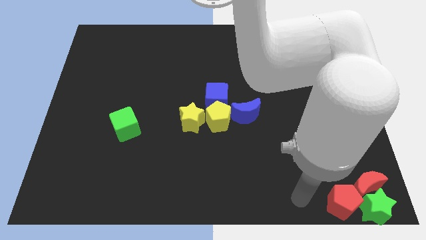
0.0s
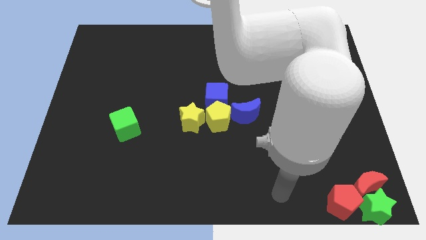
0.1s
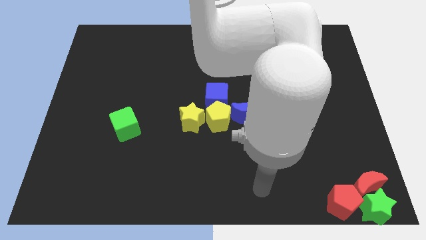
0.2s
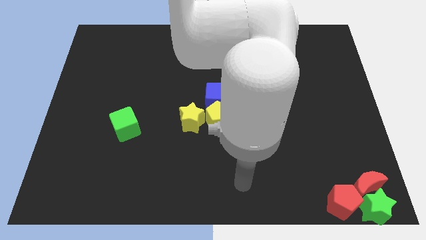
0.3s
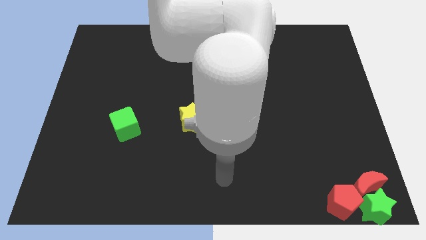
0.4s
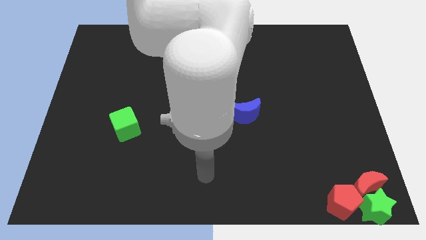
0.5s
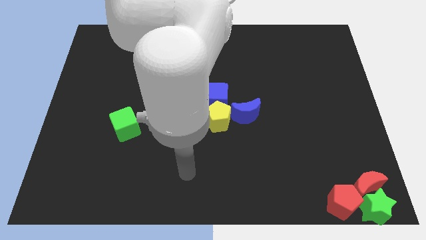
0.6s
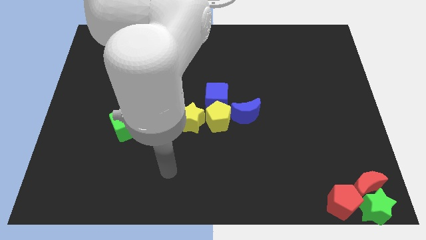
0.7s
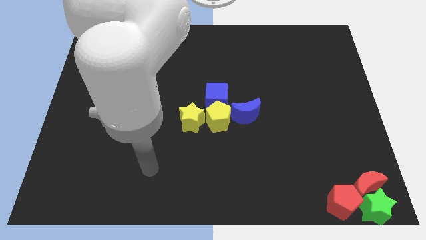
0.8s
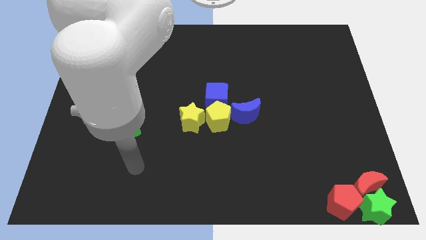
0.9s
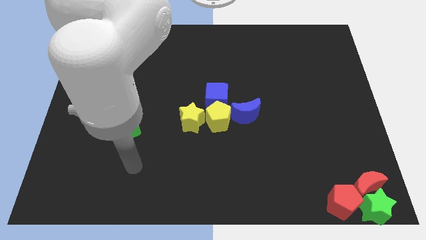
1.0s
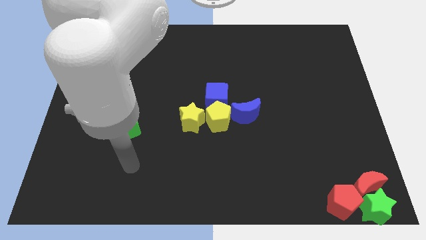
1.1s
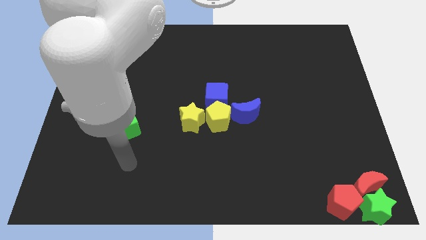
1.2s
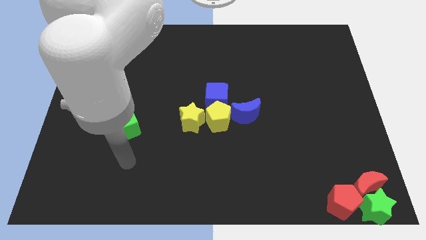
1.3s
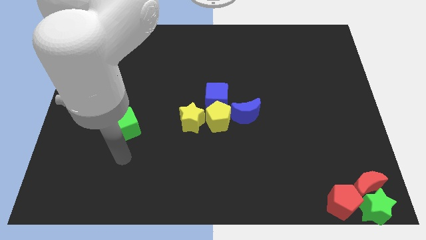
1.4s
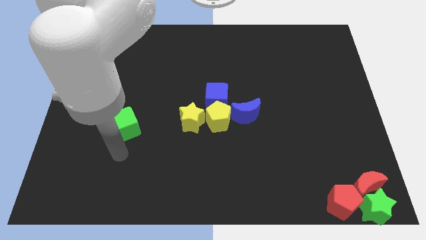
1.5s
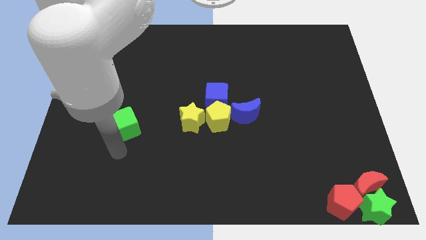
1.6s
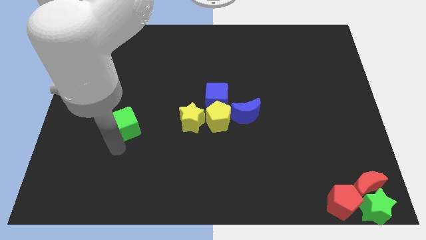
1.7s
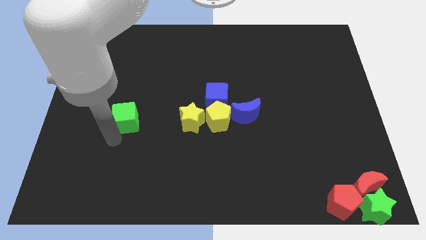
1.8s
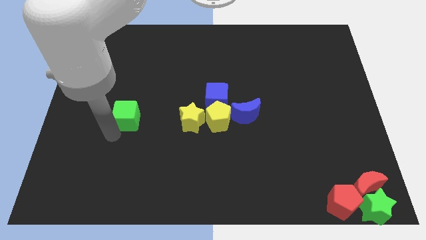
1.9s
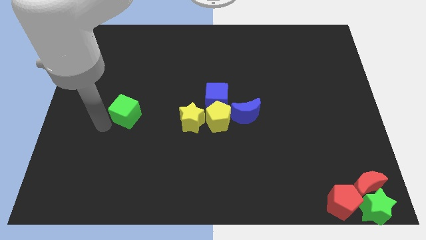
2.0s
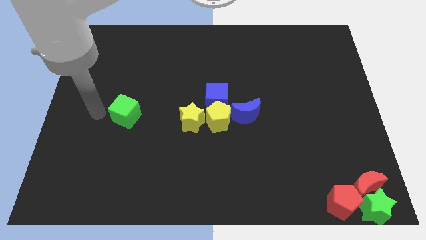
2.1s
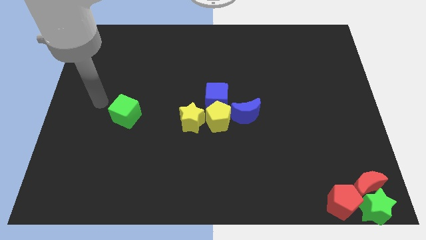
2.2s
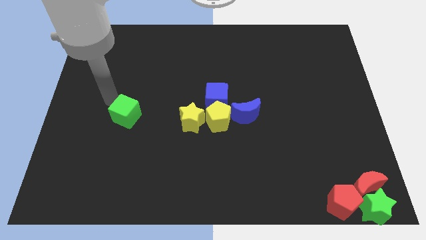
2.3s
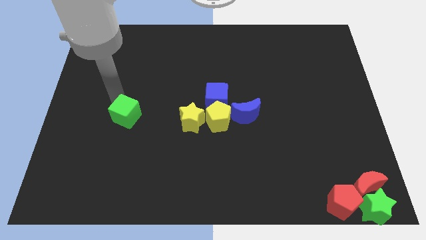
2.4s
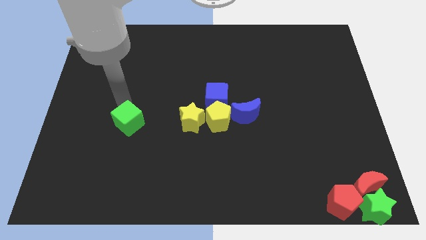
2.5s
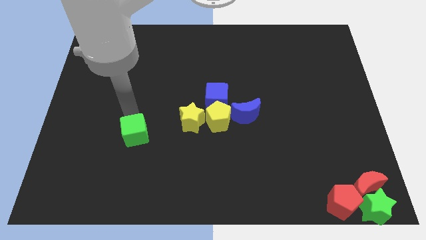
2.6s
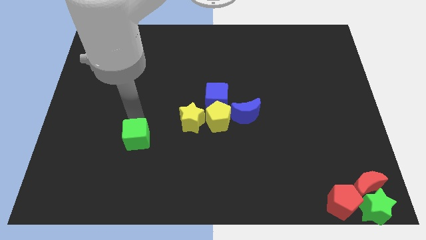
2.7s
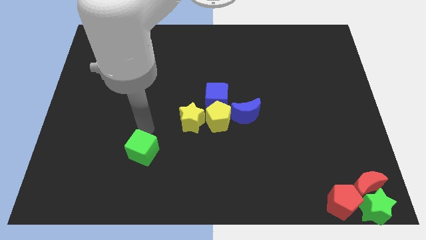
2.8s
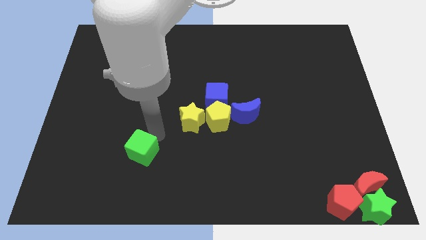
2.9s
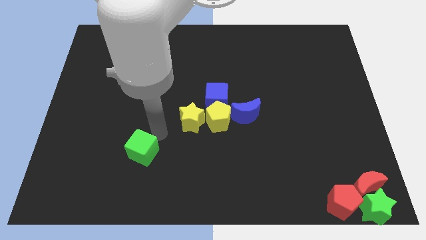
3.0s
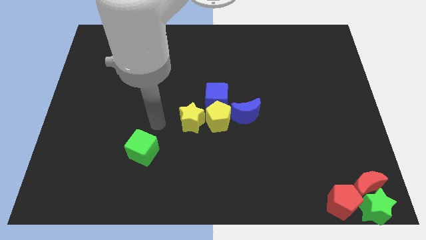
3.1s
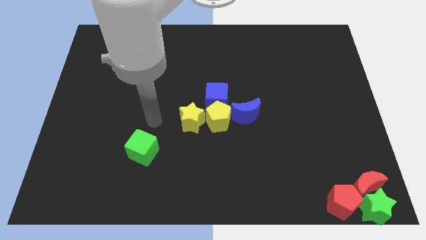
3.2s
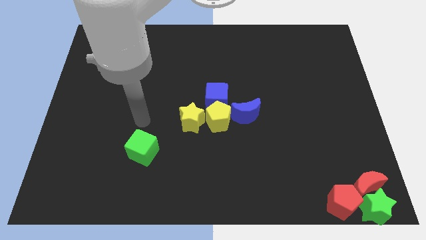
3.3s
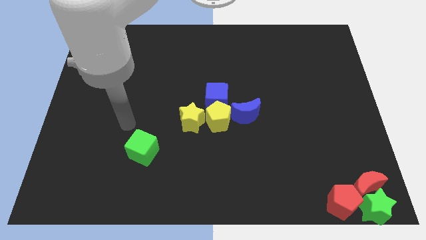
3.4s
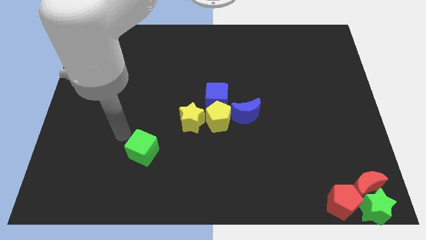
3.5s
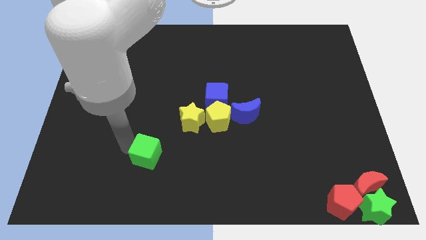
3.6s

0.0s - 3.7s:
move the green cube to the center

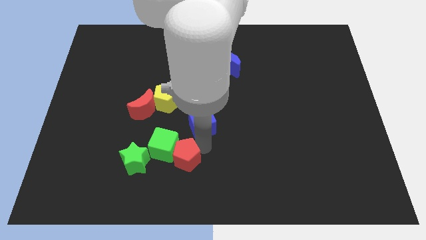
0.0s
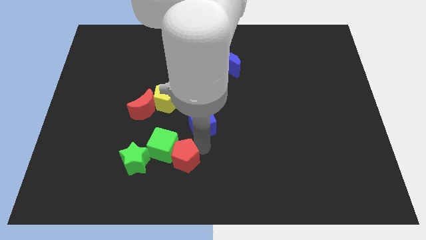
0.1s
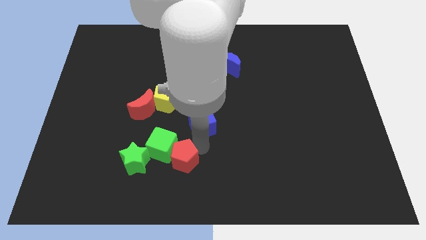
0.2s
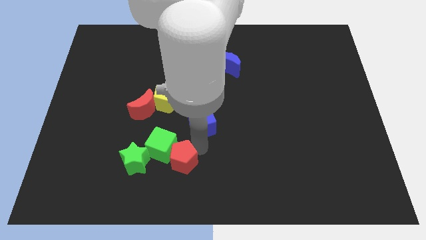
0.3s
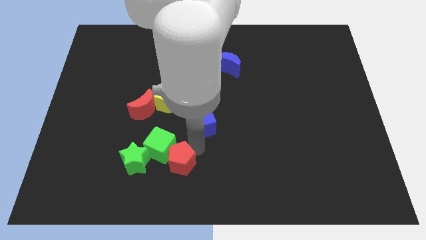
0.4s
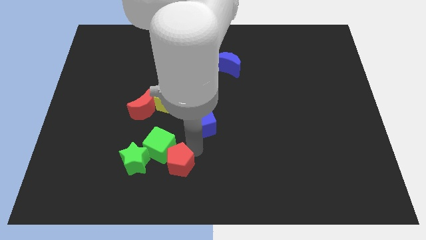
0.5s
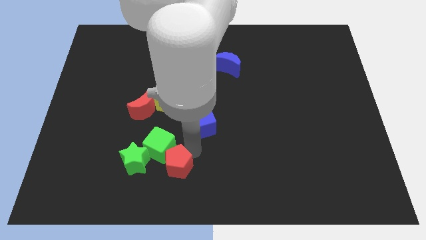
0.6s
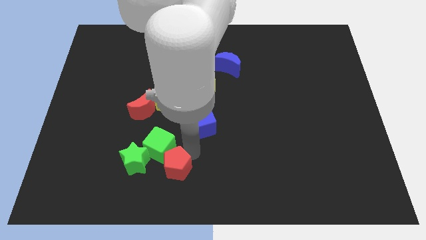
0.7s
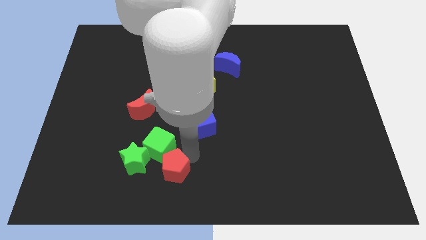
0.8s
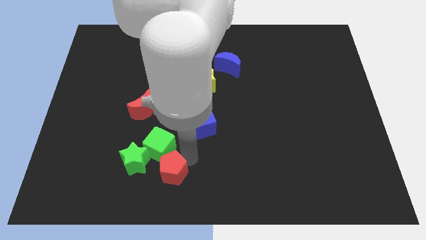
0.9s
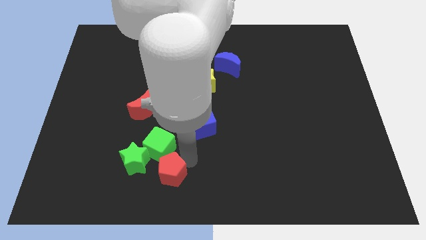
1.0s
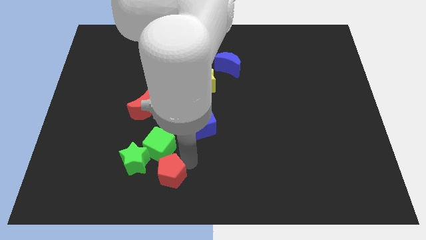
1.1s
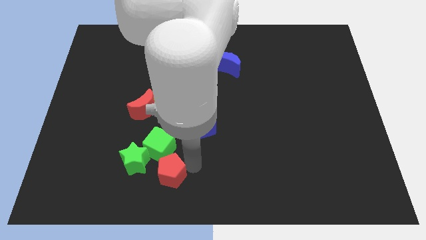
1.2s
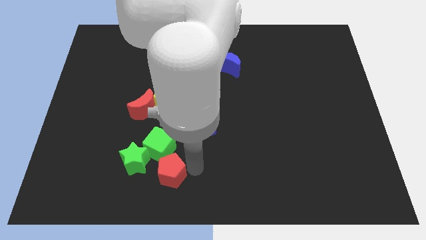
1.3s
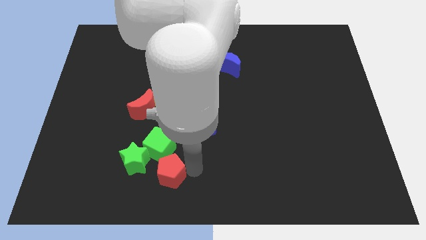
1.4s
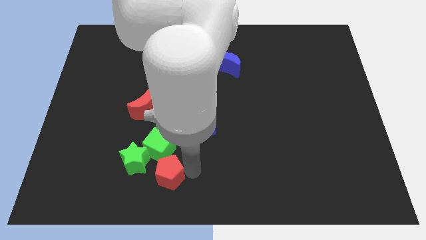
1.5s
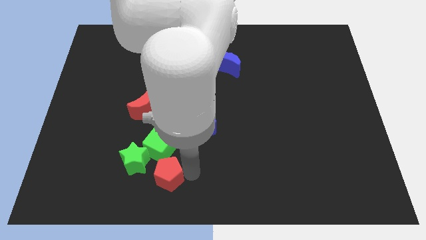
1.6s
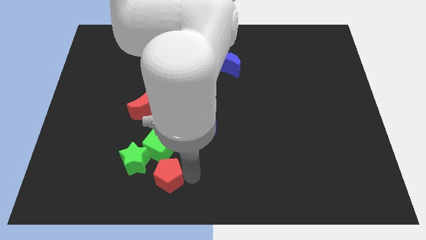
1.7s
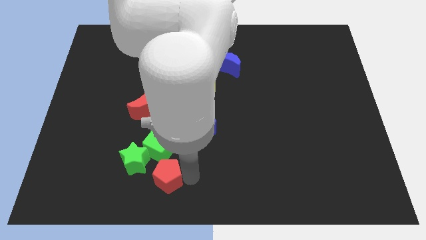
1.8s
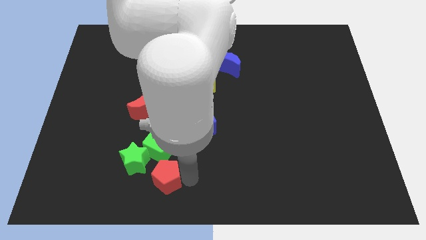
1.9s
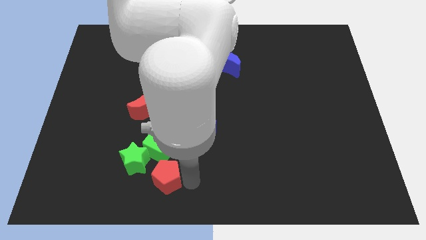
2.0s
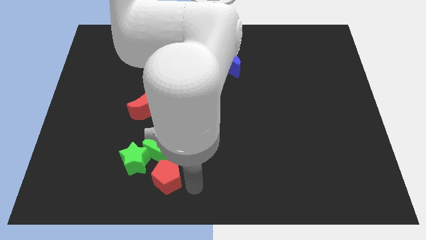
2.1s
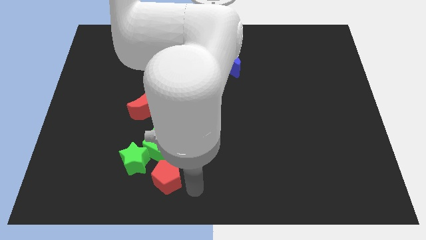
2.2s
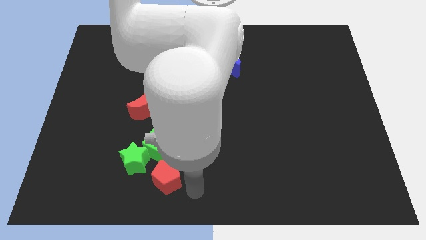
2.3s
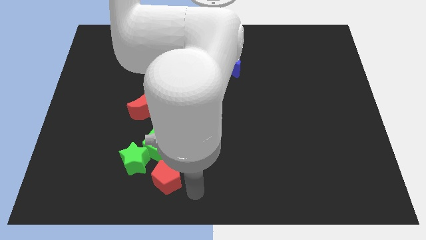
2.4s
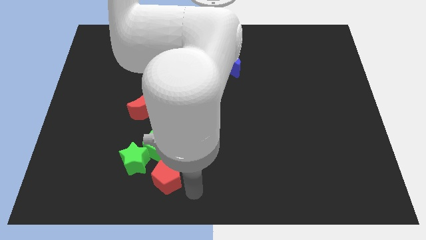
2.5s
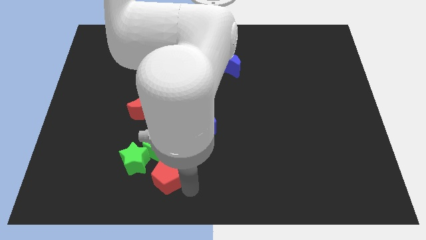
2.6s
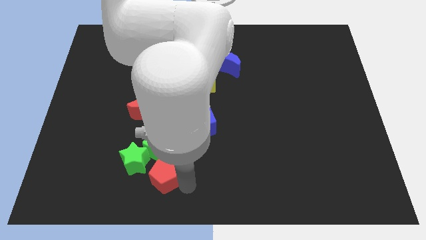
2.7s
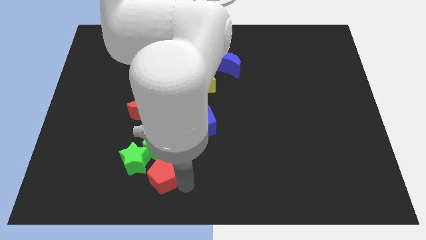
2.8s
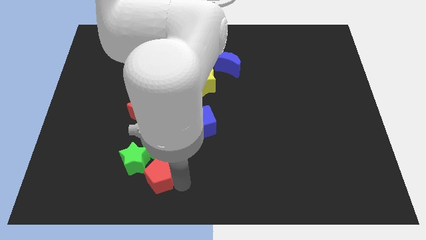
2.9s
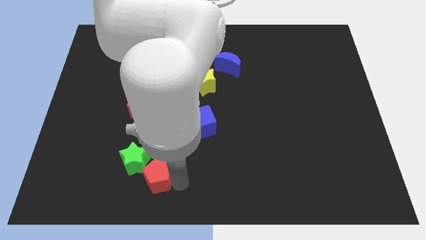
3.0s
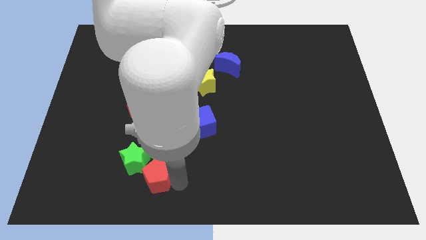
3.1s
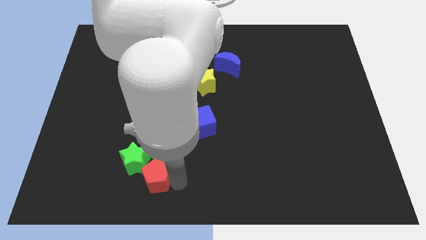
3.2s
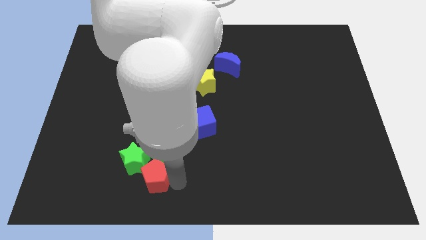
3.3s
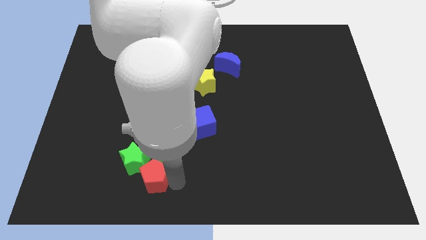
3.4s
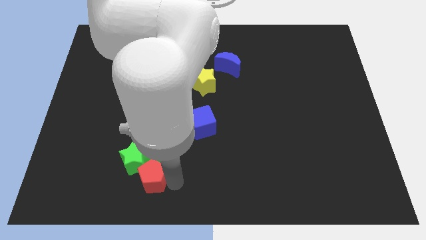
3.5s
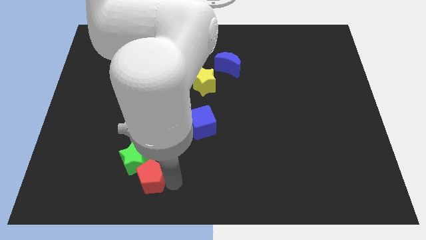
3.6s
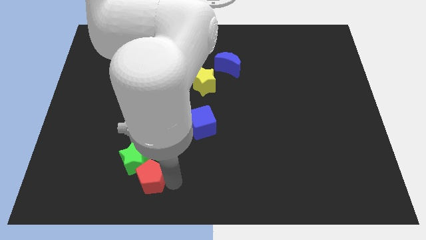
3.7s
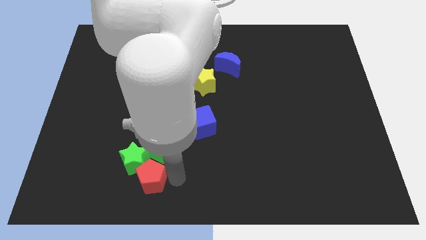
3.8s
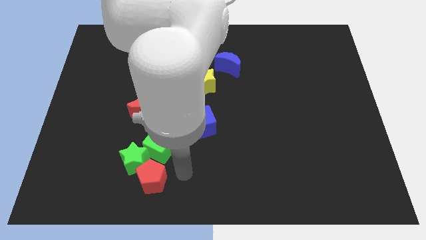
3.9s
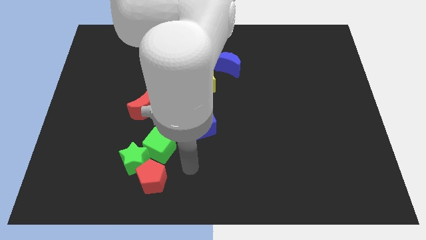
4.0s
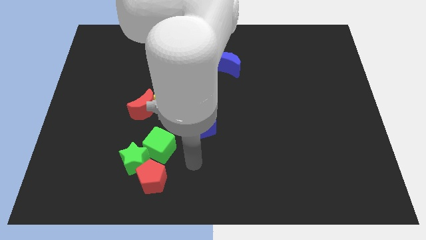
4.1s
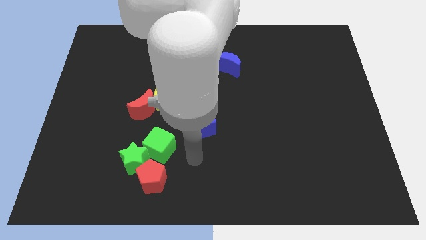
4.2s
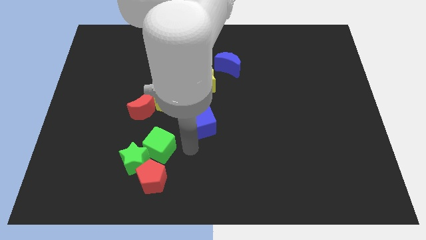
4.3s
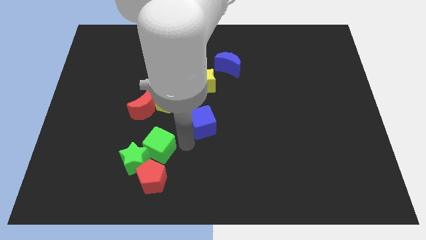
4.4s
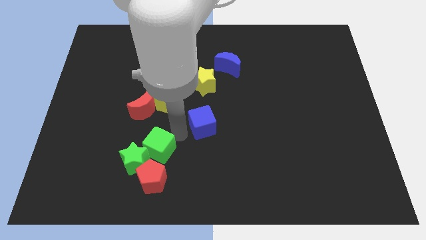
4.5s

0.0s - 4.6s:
push the red pentagon into green star

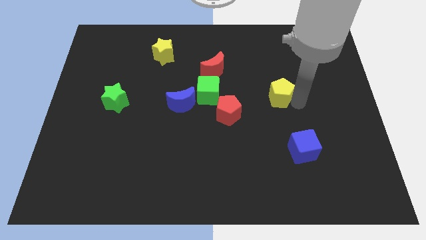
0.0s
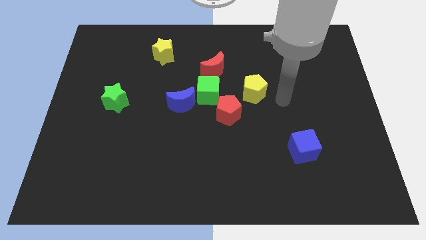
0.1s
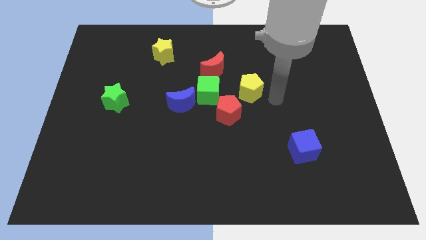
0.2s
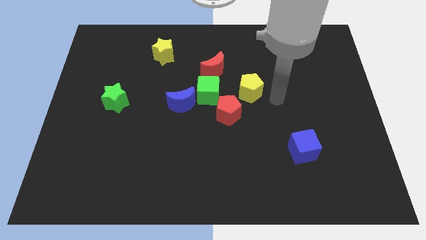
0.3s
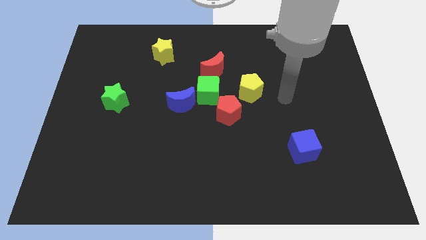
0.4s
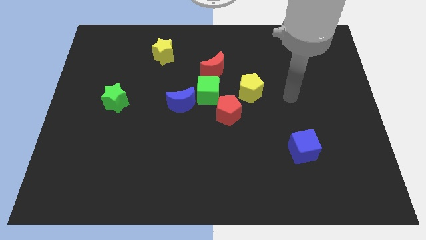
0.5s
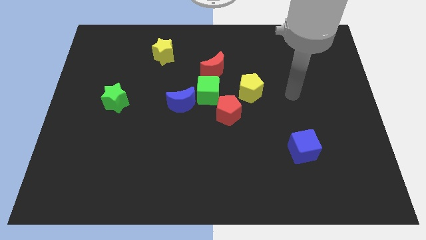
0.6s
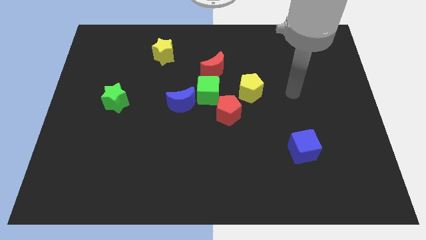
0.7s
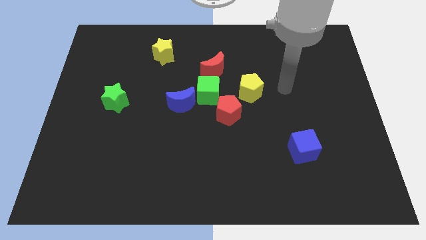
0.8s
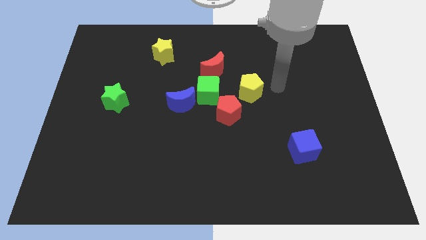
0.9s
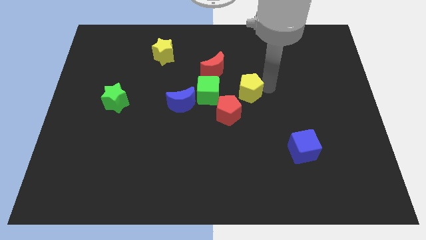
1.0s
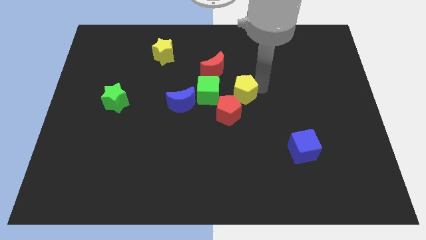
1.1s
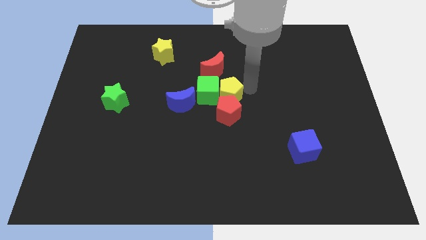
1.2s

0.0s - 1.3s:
place yellow pentagon on right to green cube
